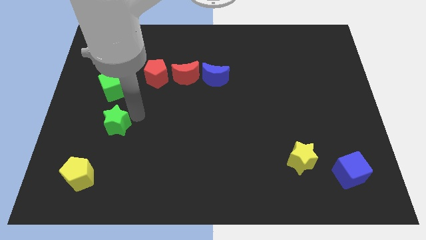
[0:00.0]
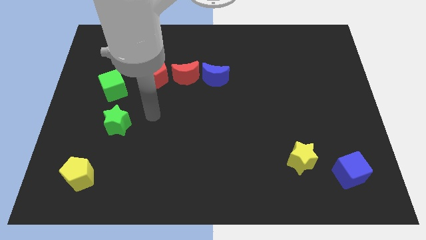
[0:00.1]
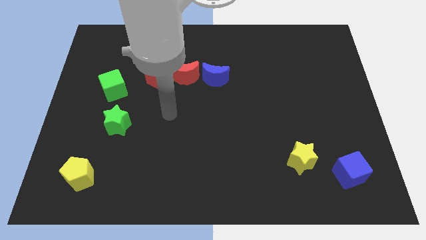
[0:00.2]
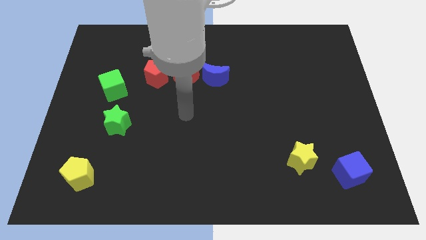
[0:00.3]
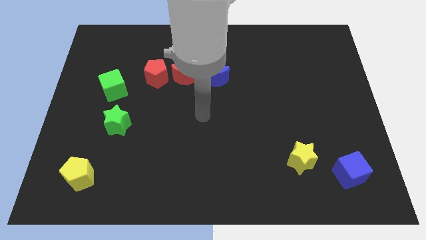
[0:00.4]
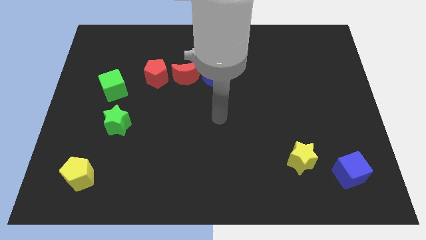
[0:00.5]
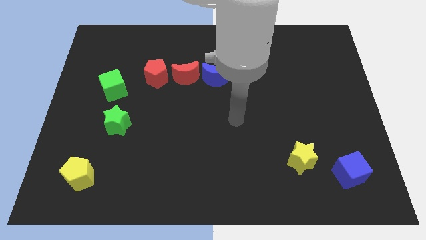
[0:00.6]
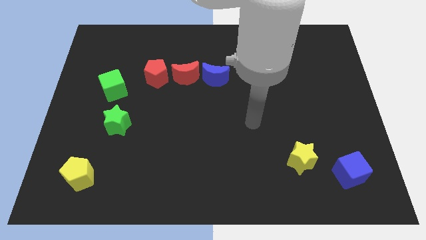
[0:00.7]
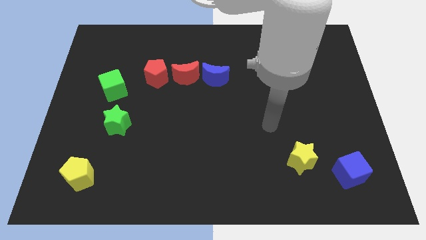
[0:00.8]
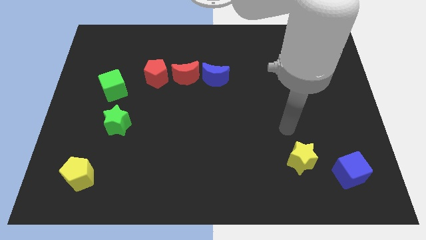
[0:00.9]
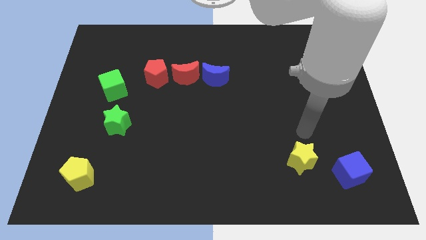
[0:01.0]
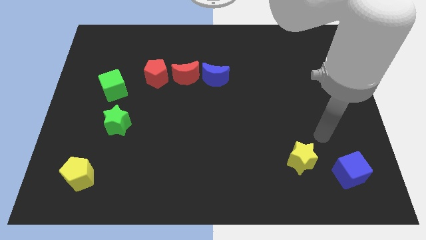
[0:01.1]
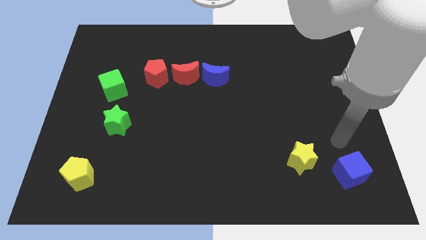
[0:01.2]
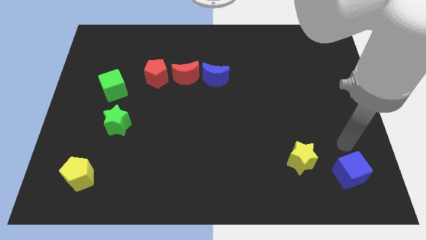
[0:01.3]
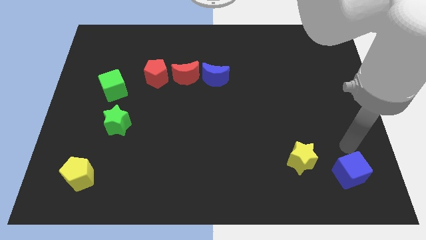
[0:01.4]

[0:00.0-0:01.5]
move your arm to the top of the blue cube

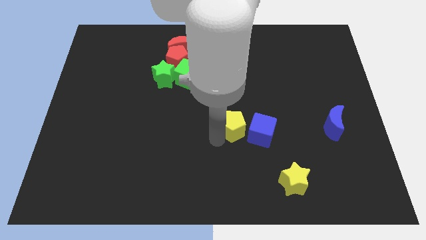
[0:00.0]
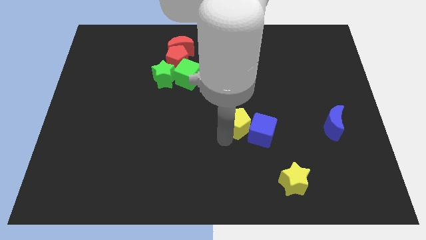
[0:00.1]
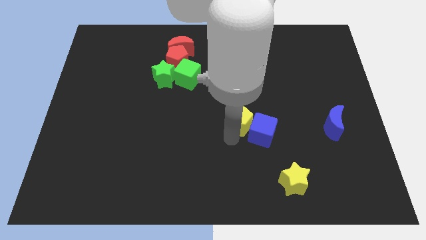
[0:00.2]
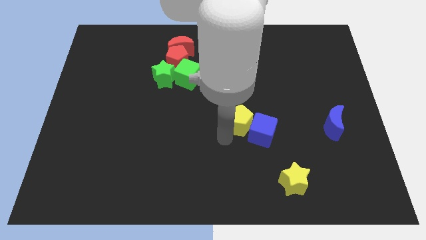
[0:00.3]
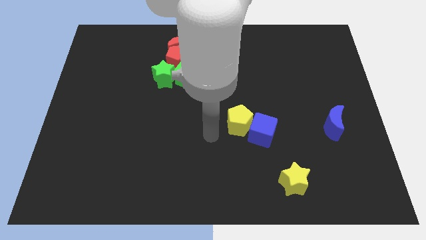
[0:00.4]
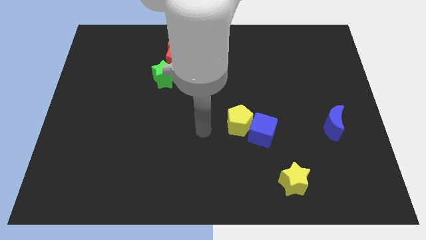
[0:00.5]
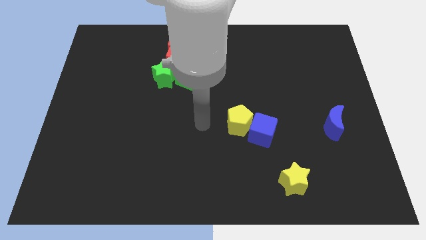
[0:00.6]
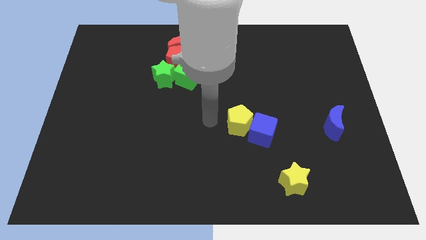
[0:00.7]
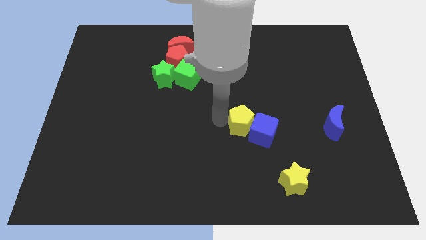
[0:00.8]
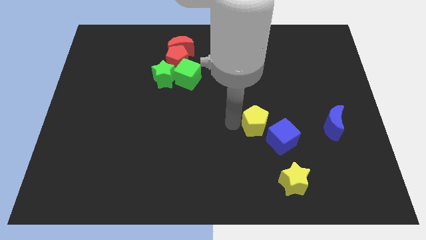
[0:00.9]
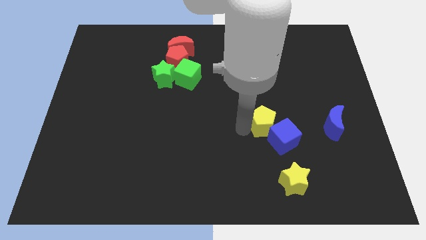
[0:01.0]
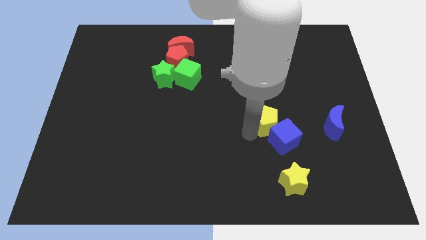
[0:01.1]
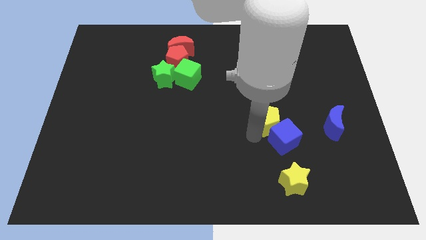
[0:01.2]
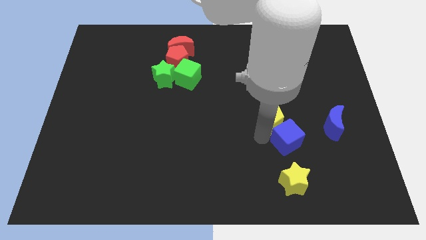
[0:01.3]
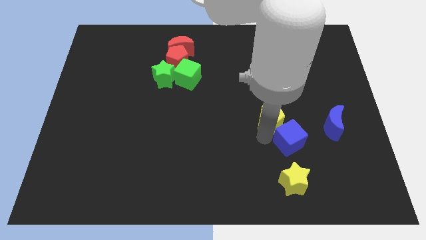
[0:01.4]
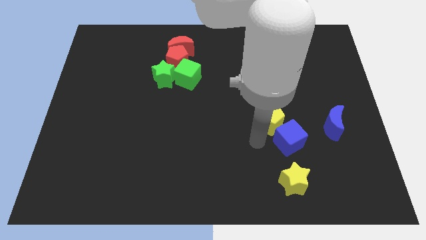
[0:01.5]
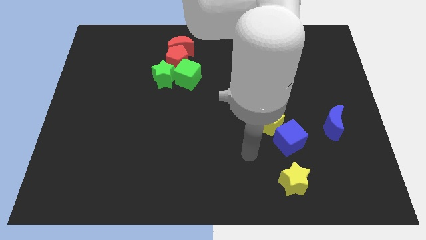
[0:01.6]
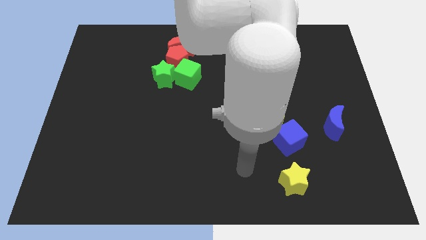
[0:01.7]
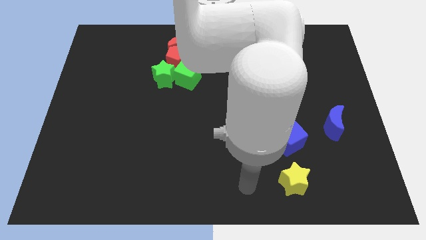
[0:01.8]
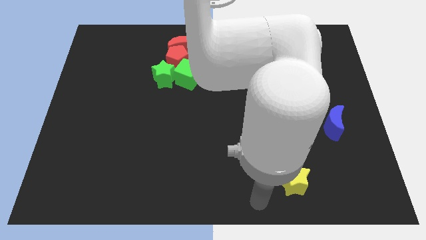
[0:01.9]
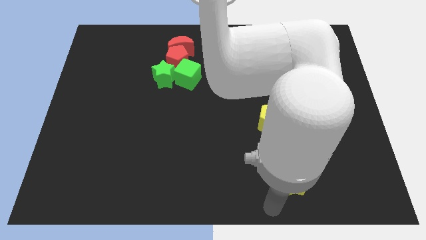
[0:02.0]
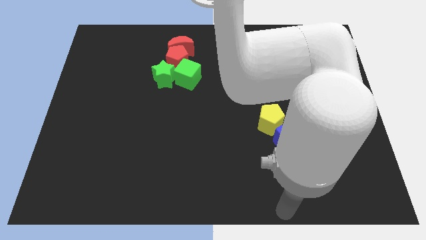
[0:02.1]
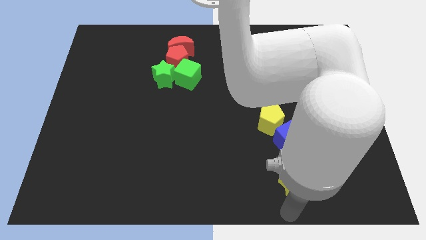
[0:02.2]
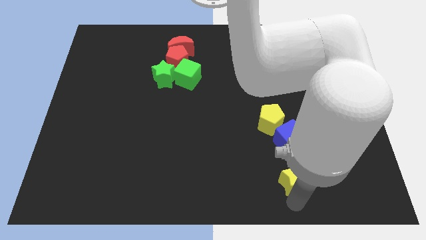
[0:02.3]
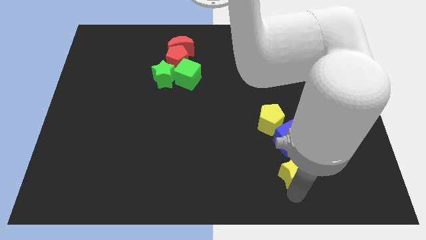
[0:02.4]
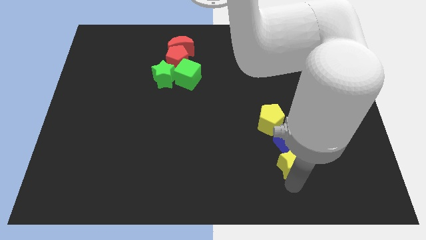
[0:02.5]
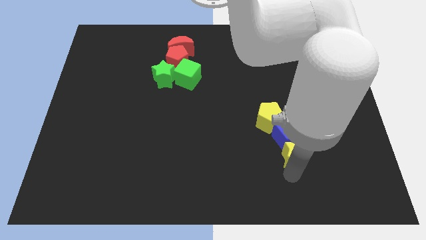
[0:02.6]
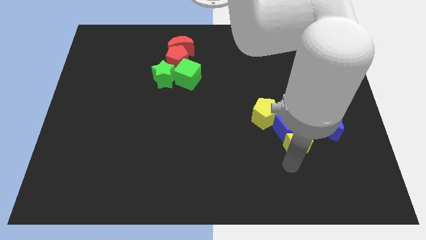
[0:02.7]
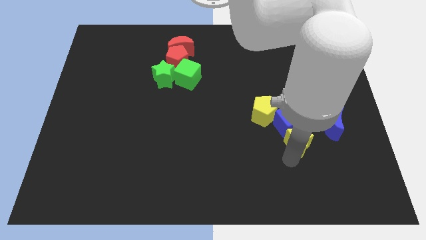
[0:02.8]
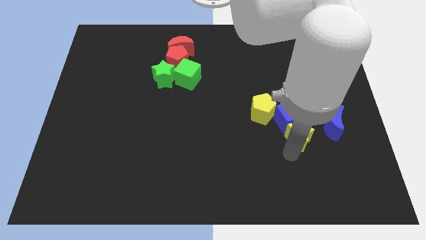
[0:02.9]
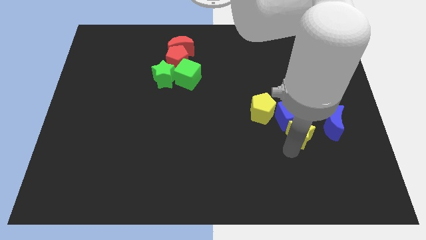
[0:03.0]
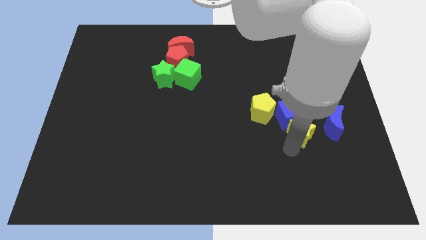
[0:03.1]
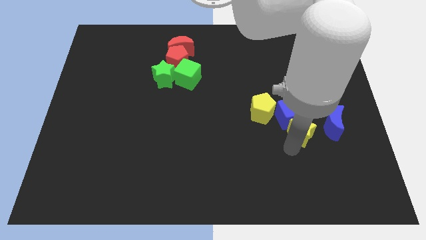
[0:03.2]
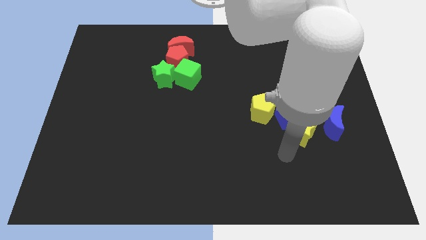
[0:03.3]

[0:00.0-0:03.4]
push yellow star into blue cube

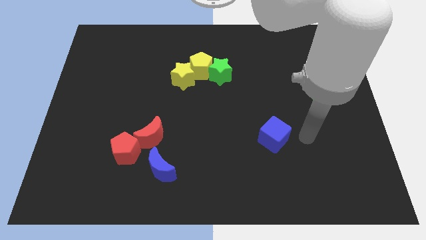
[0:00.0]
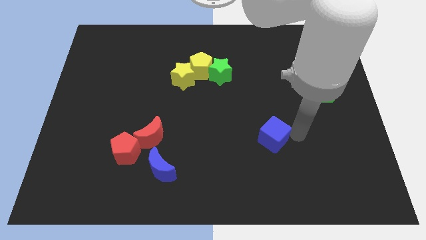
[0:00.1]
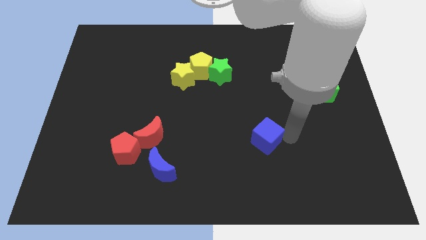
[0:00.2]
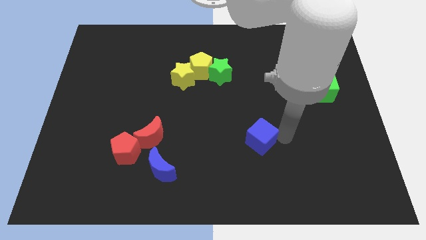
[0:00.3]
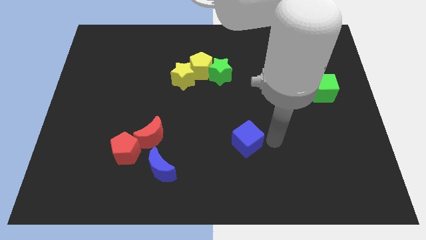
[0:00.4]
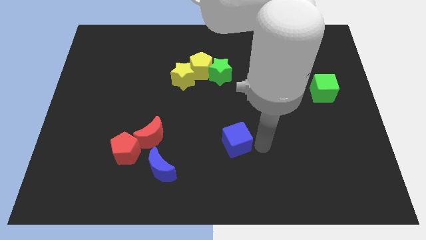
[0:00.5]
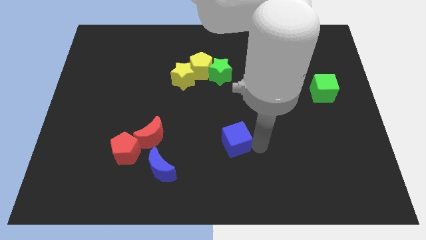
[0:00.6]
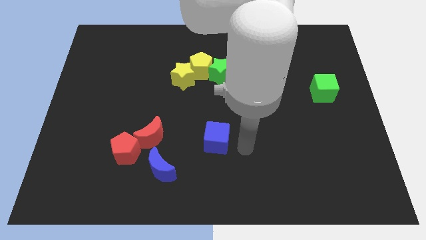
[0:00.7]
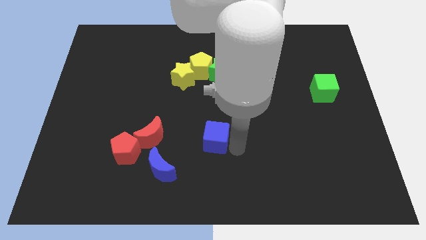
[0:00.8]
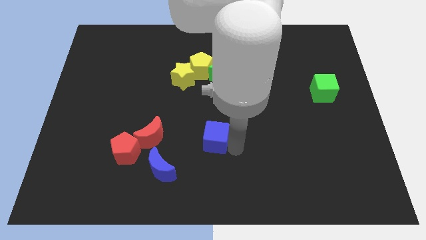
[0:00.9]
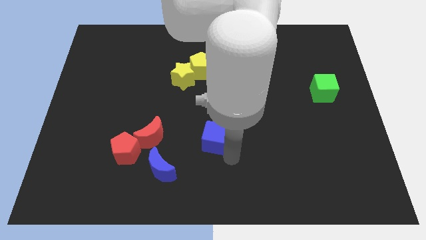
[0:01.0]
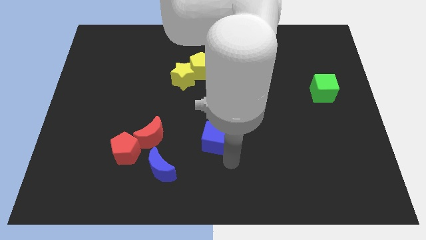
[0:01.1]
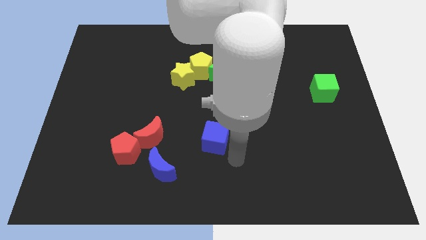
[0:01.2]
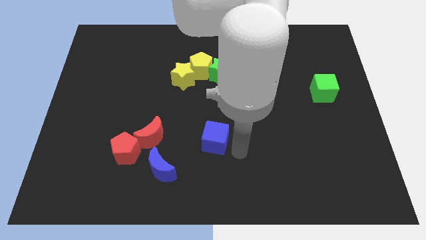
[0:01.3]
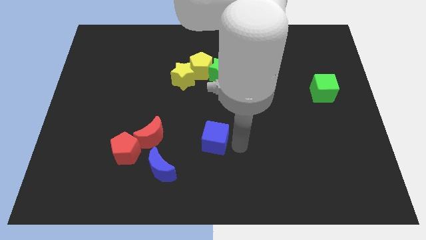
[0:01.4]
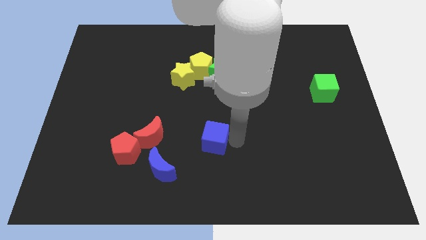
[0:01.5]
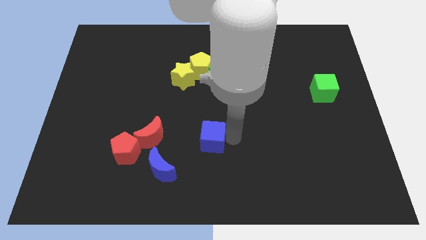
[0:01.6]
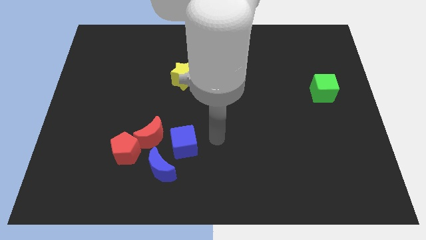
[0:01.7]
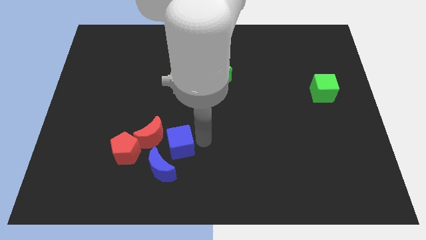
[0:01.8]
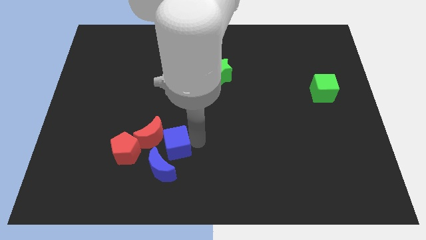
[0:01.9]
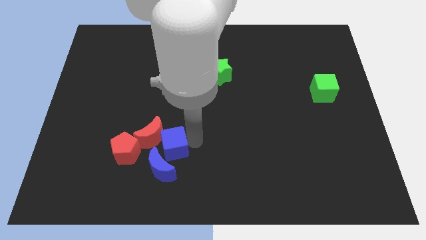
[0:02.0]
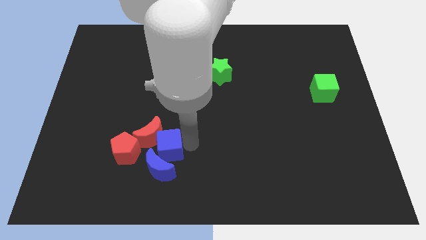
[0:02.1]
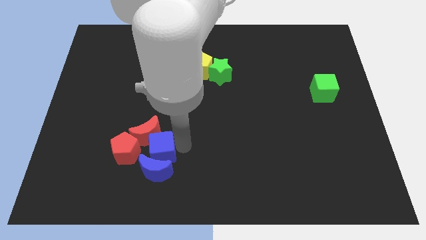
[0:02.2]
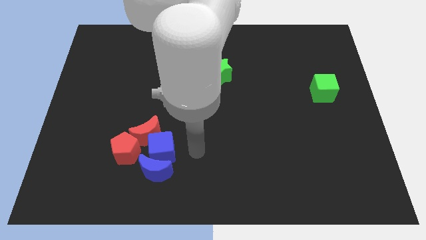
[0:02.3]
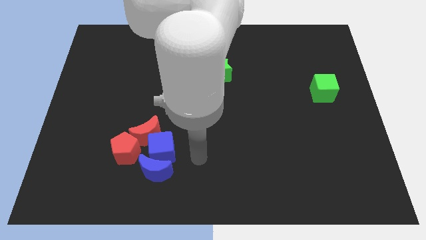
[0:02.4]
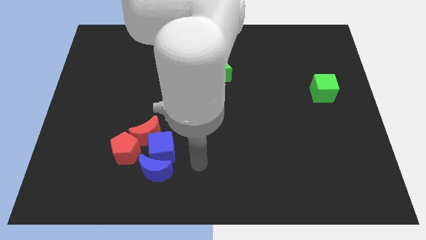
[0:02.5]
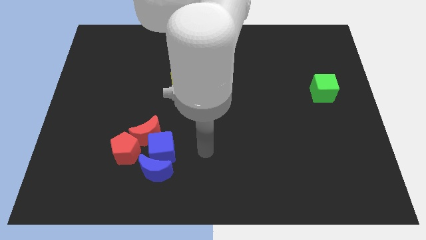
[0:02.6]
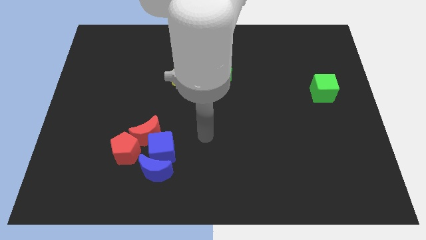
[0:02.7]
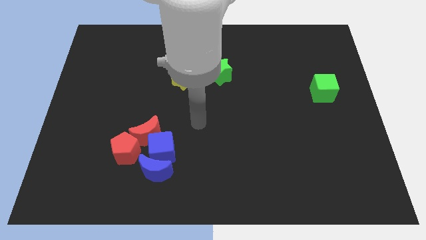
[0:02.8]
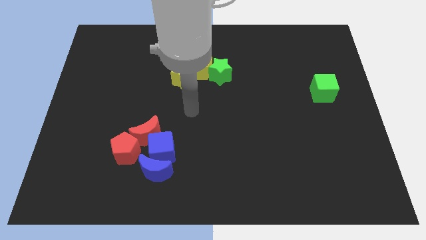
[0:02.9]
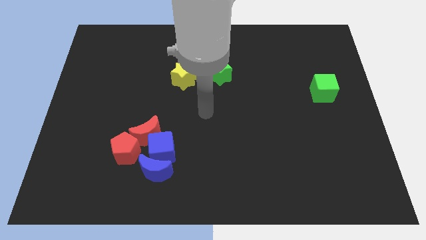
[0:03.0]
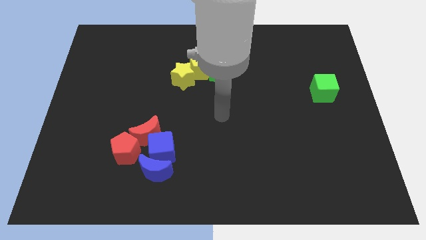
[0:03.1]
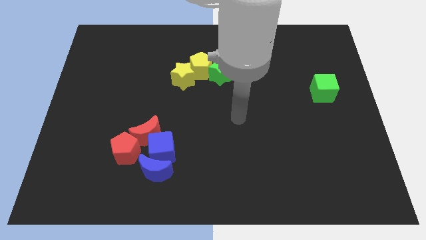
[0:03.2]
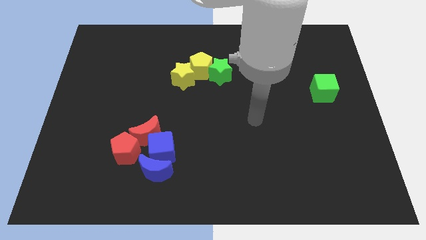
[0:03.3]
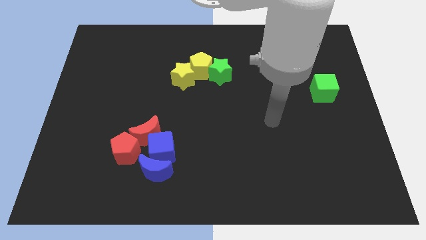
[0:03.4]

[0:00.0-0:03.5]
move the blue cube close to the red crescent

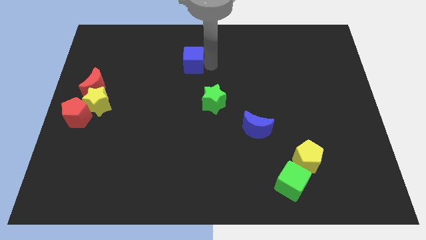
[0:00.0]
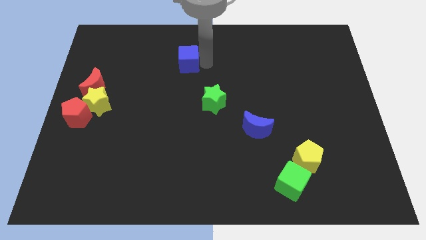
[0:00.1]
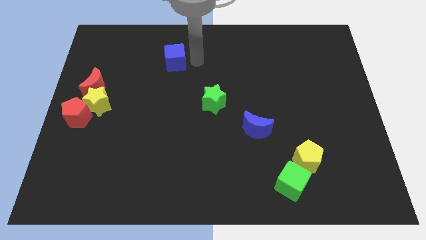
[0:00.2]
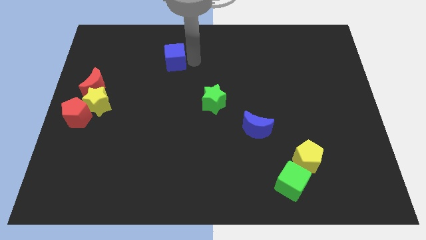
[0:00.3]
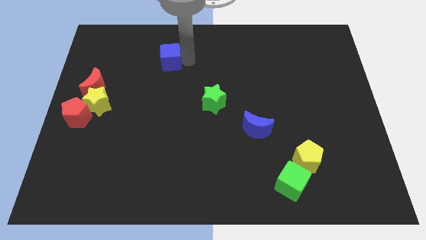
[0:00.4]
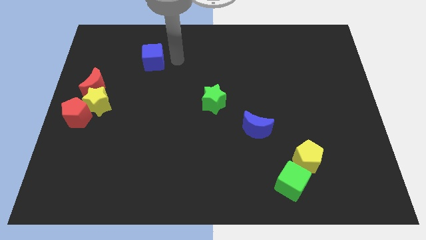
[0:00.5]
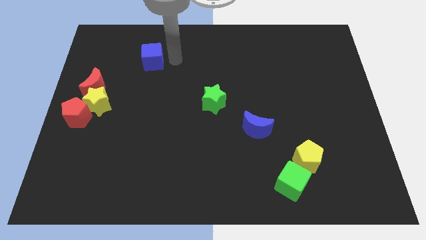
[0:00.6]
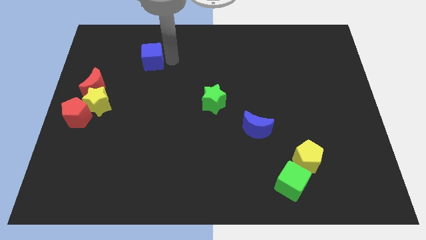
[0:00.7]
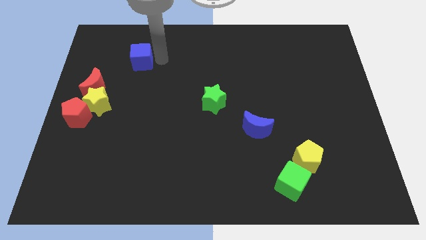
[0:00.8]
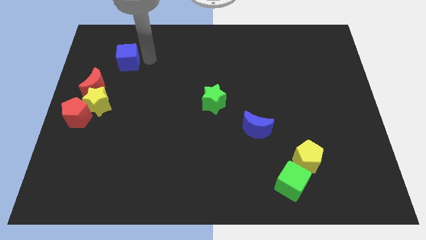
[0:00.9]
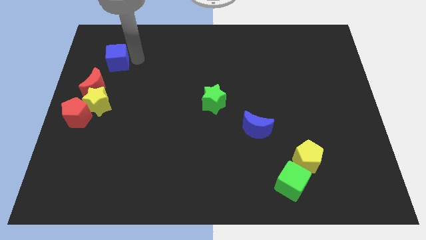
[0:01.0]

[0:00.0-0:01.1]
move the blue cube to the left of the board
